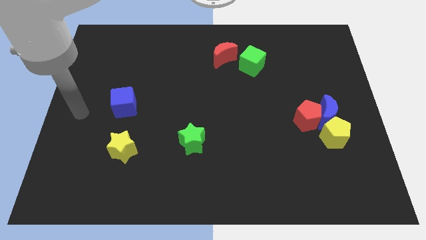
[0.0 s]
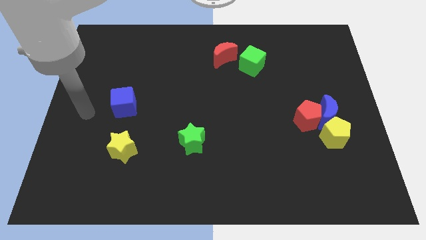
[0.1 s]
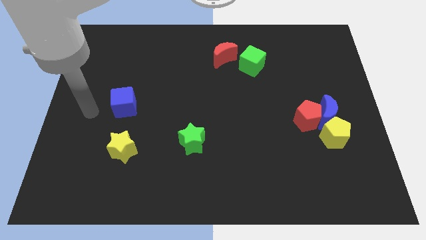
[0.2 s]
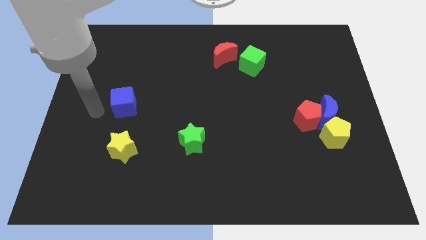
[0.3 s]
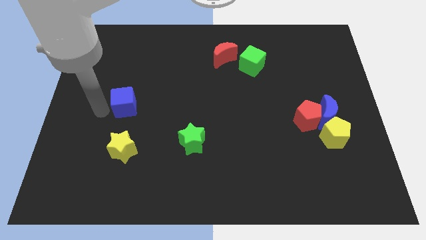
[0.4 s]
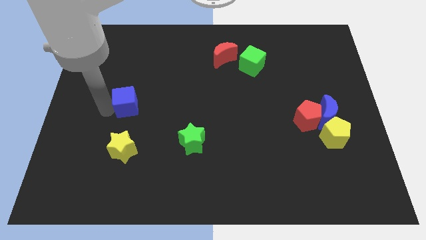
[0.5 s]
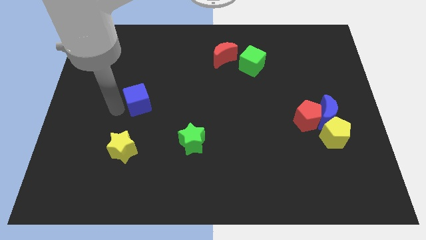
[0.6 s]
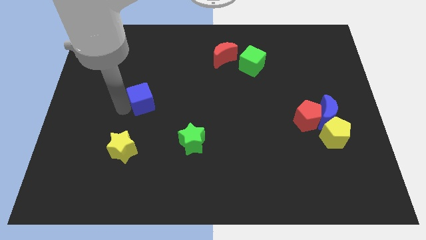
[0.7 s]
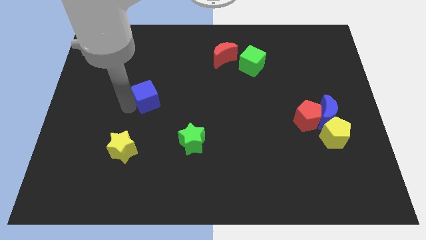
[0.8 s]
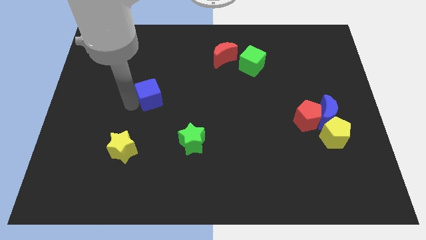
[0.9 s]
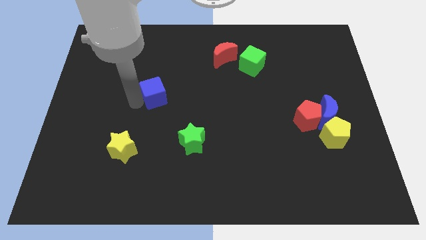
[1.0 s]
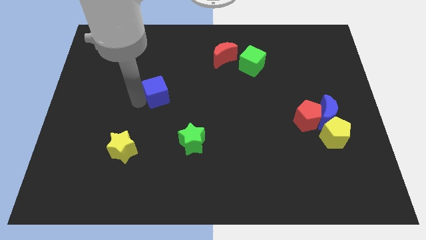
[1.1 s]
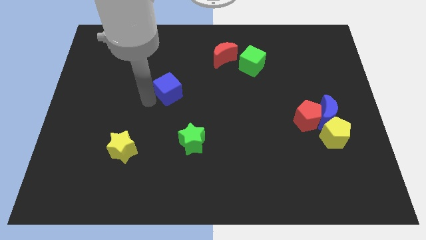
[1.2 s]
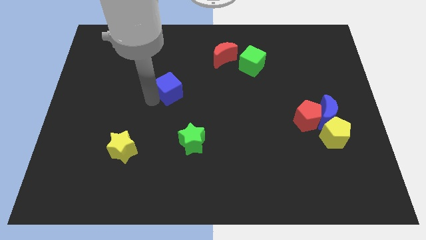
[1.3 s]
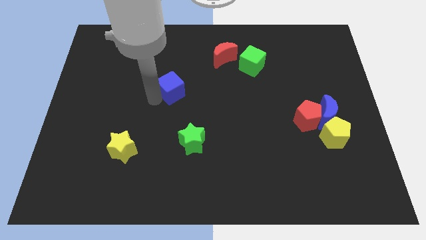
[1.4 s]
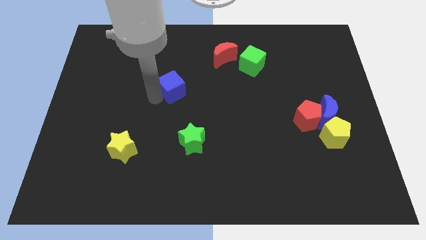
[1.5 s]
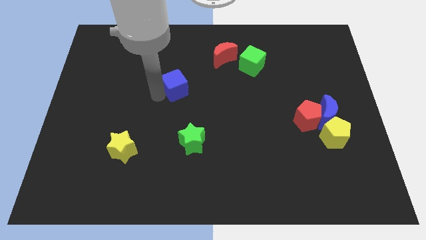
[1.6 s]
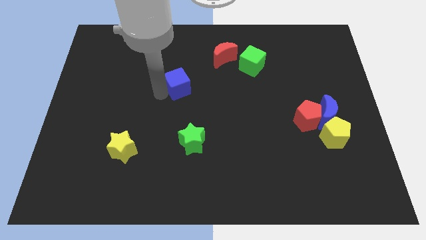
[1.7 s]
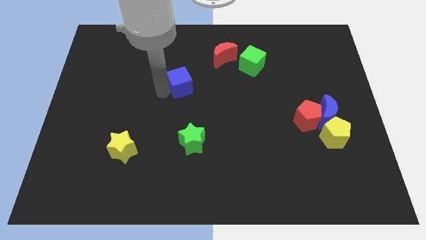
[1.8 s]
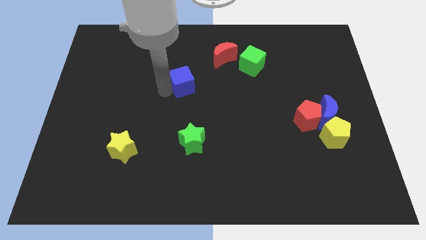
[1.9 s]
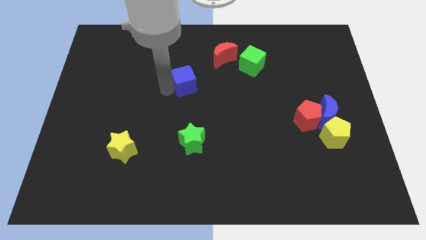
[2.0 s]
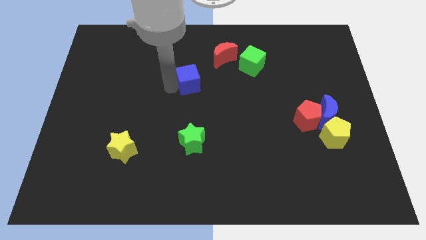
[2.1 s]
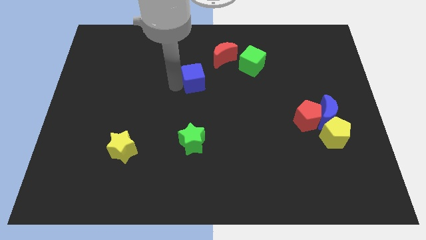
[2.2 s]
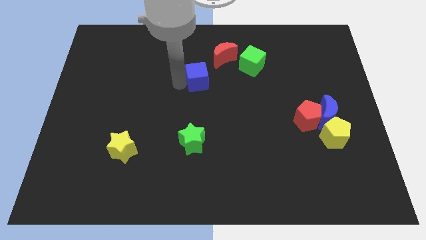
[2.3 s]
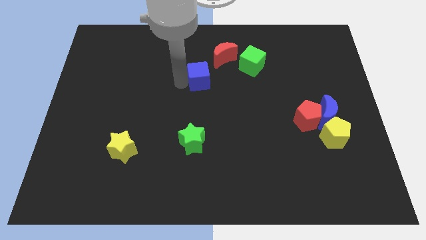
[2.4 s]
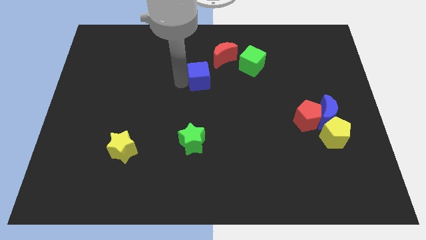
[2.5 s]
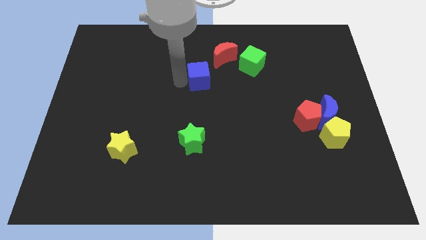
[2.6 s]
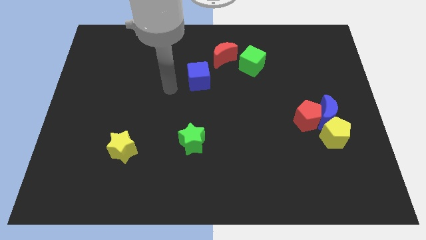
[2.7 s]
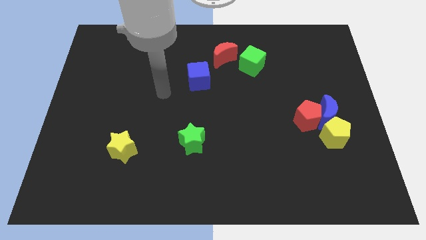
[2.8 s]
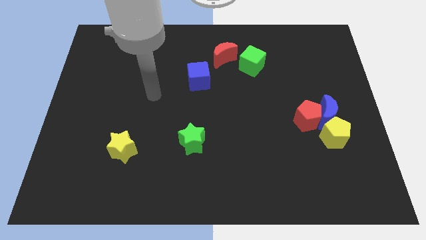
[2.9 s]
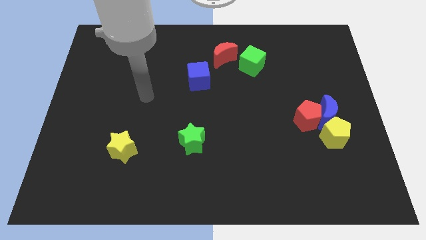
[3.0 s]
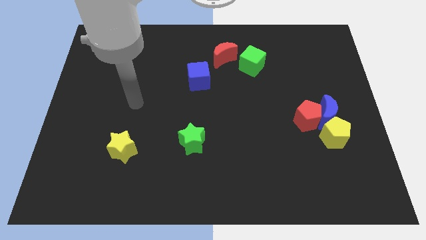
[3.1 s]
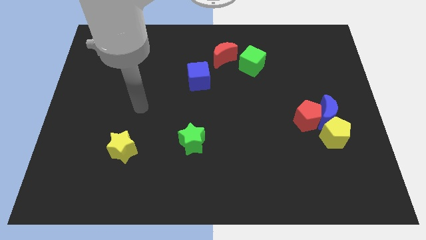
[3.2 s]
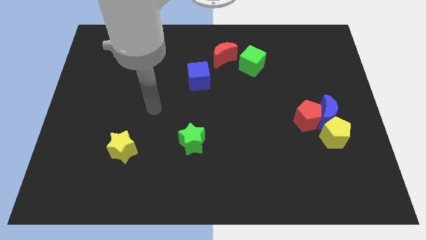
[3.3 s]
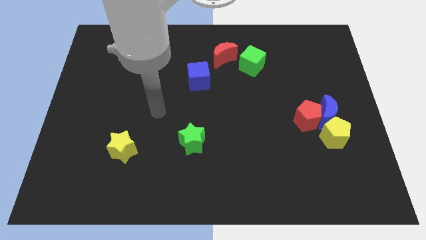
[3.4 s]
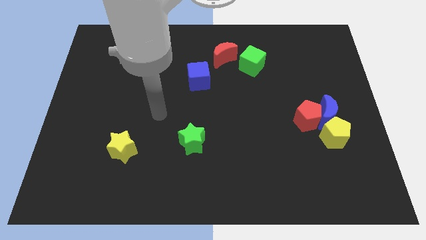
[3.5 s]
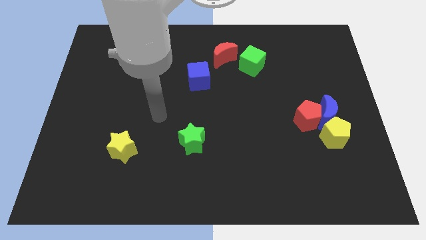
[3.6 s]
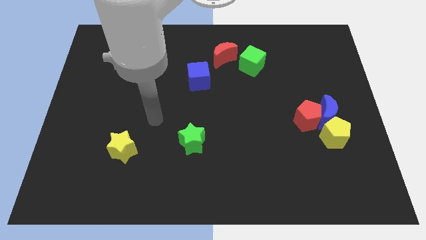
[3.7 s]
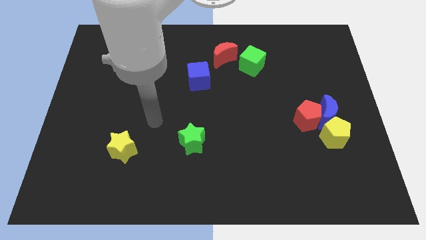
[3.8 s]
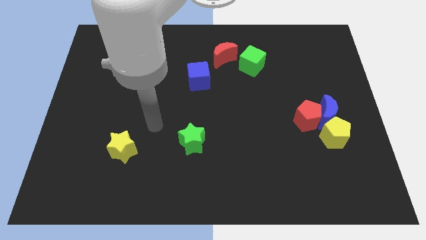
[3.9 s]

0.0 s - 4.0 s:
move your arm in between green star and yellow star

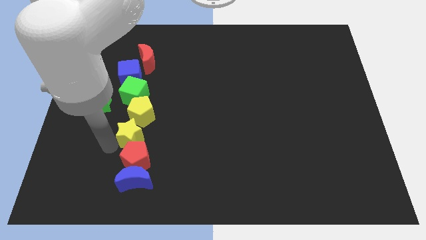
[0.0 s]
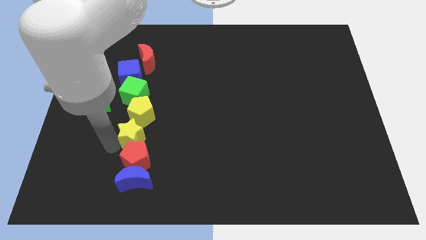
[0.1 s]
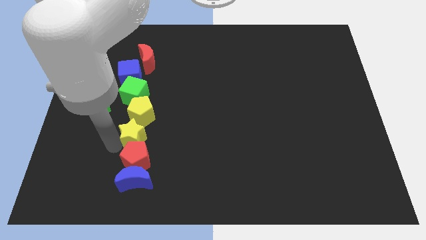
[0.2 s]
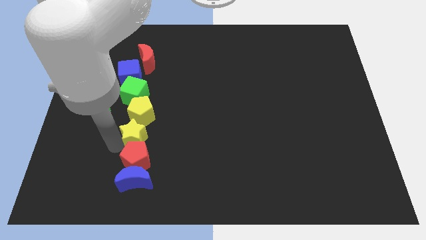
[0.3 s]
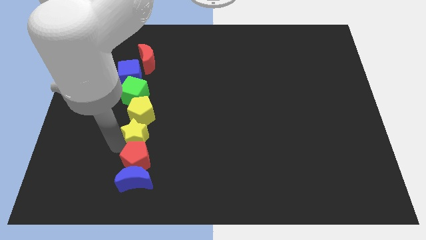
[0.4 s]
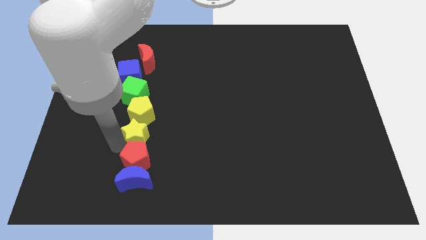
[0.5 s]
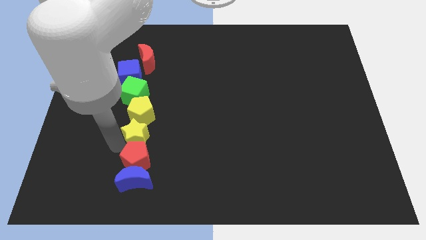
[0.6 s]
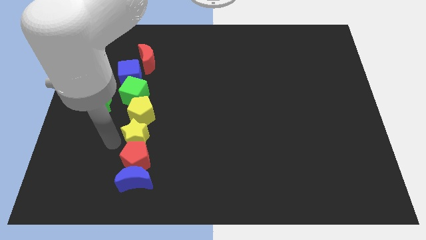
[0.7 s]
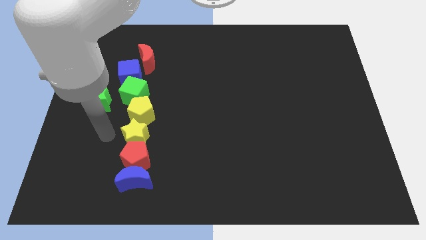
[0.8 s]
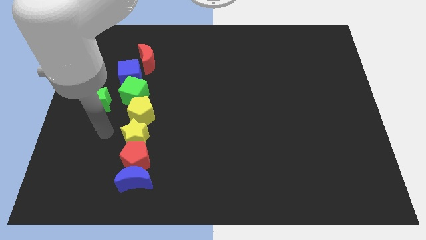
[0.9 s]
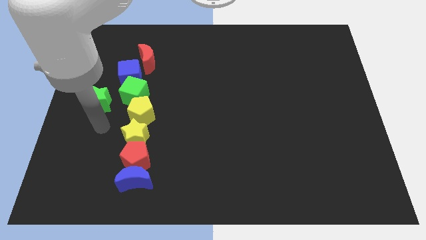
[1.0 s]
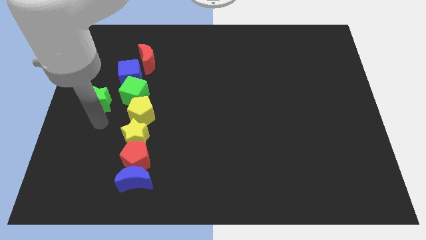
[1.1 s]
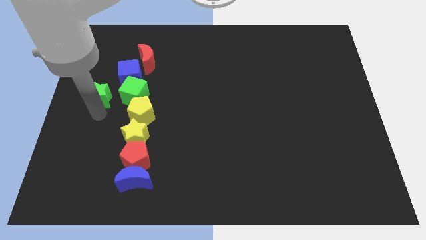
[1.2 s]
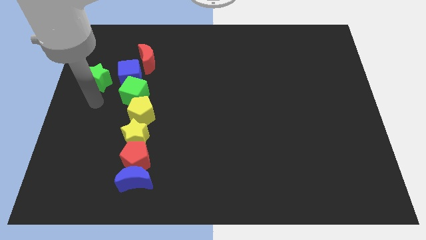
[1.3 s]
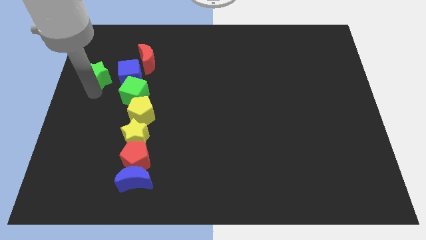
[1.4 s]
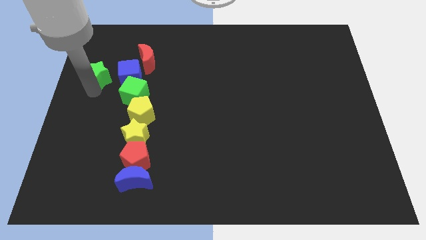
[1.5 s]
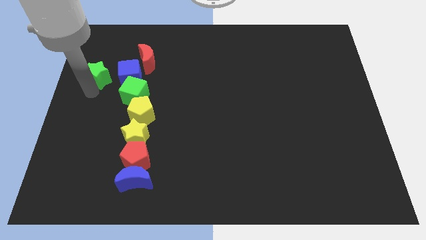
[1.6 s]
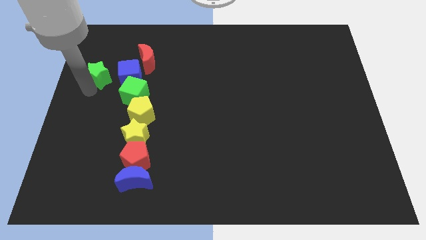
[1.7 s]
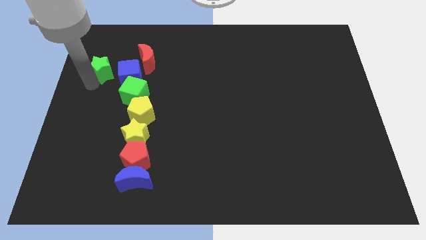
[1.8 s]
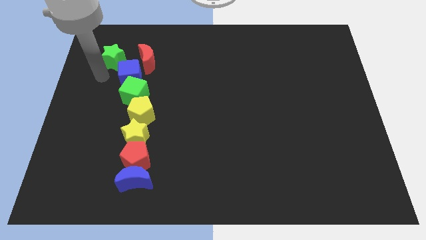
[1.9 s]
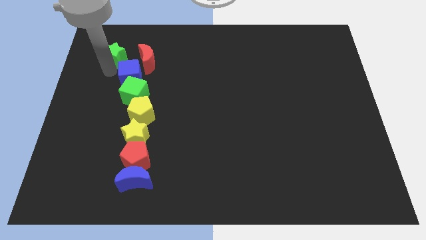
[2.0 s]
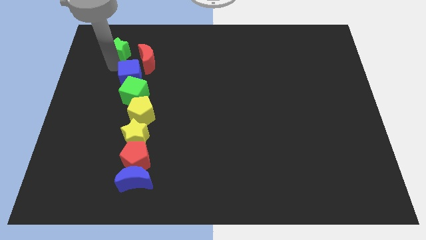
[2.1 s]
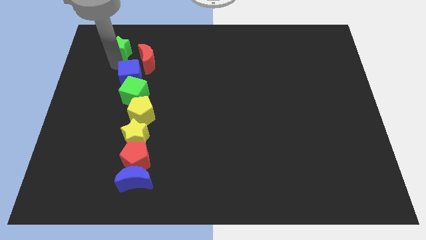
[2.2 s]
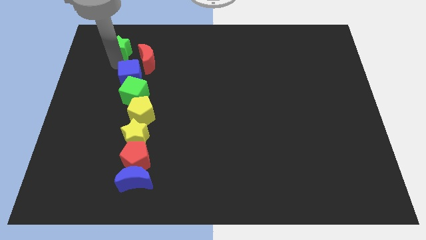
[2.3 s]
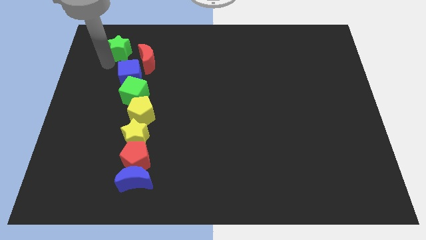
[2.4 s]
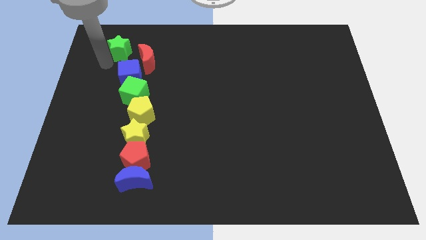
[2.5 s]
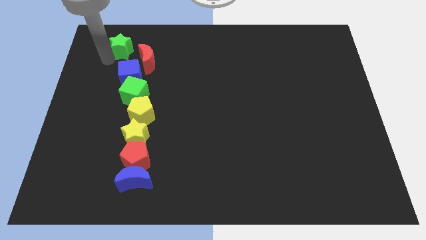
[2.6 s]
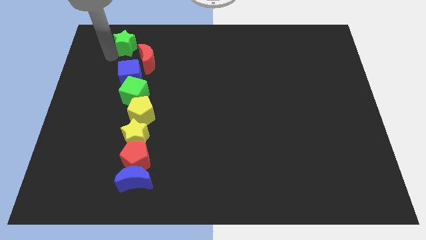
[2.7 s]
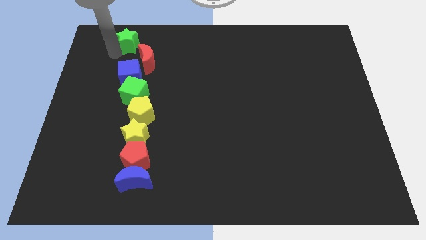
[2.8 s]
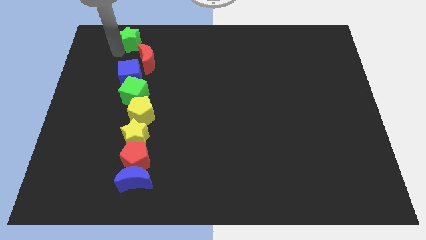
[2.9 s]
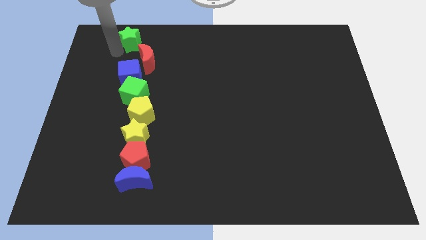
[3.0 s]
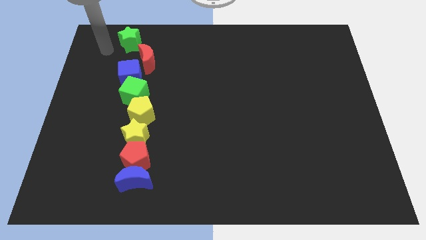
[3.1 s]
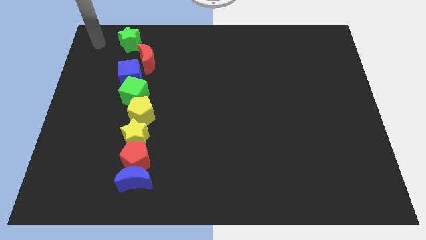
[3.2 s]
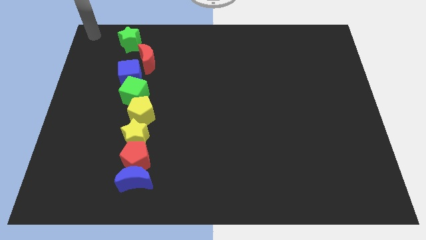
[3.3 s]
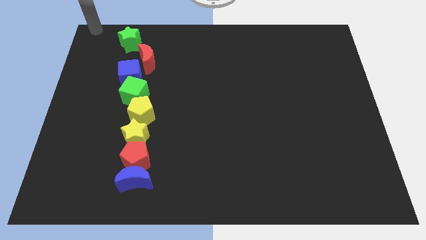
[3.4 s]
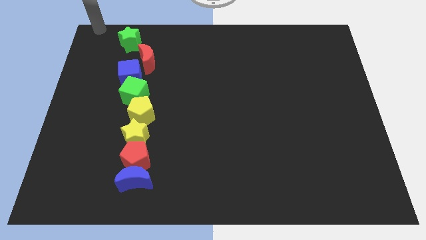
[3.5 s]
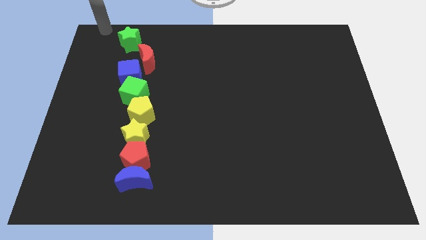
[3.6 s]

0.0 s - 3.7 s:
move green star to the top of blue cube

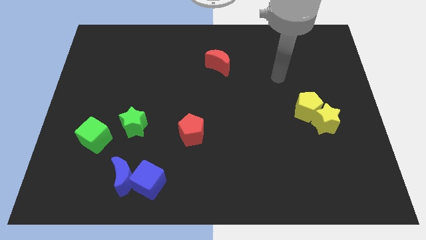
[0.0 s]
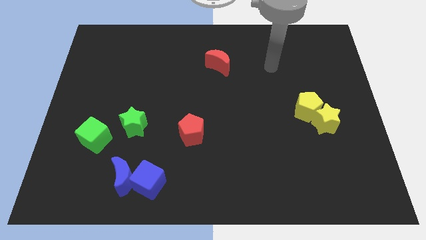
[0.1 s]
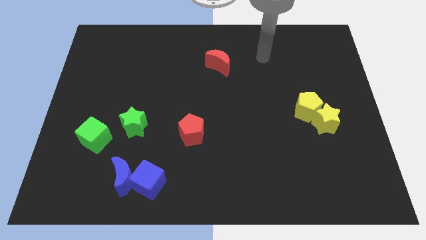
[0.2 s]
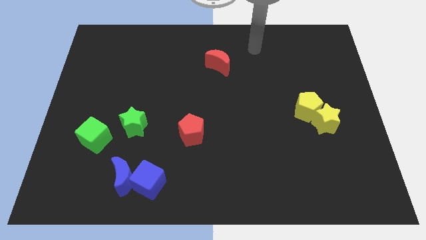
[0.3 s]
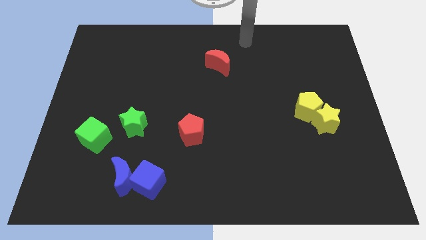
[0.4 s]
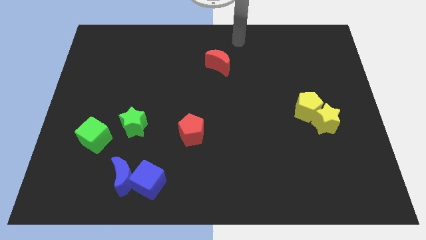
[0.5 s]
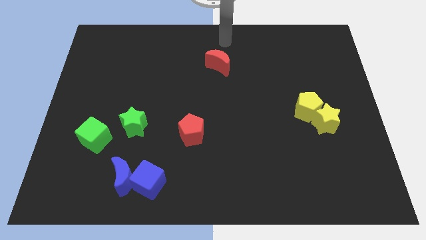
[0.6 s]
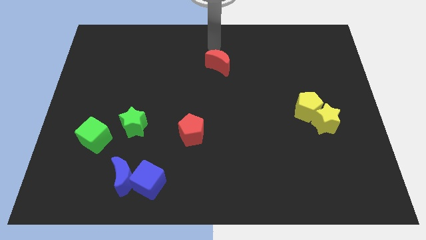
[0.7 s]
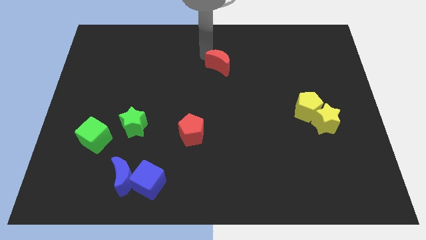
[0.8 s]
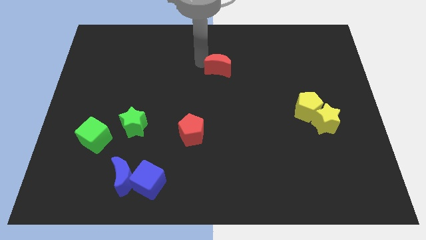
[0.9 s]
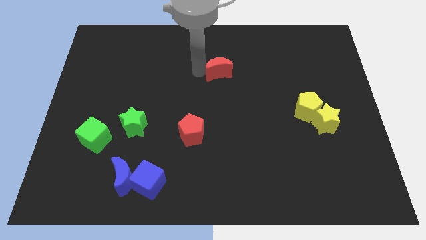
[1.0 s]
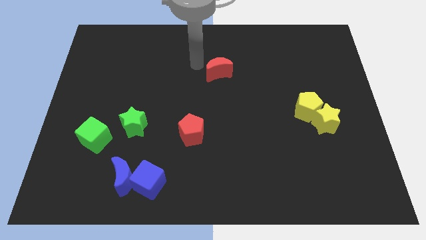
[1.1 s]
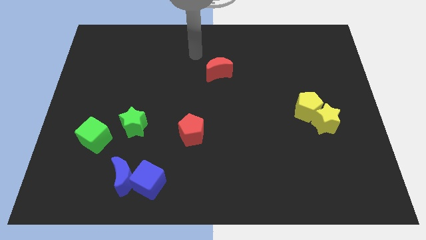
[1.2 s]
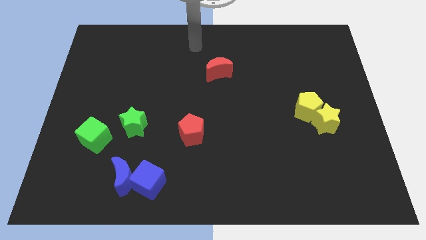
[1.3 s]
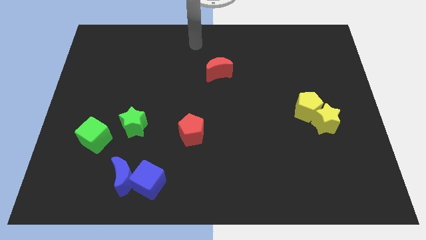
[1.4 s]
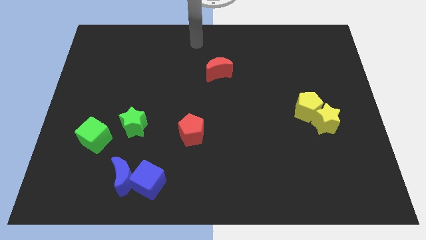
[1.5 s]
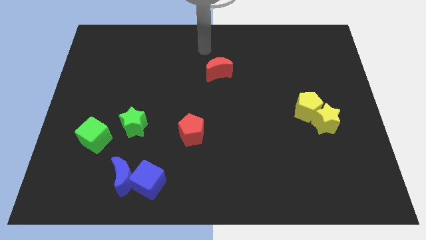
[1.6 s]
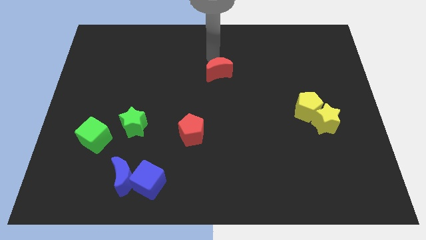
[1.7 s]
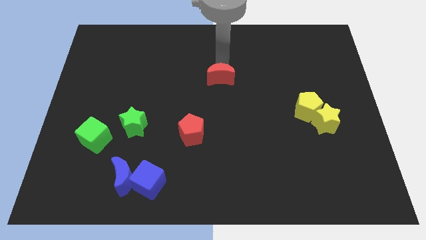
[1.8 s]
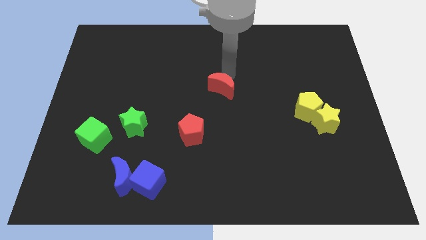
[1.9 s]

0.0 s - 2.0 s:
push the red moon towards the red pentagon
